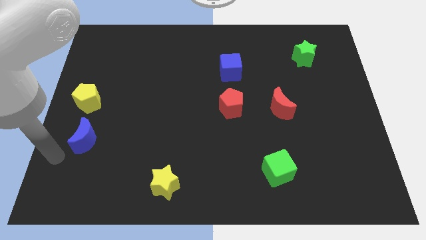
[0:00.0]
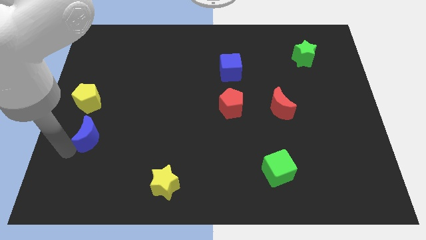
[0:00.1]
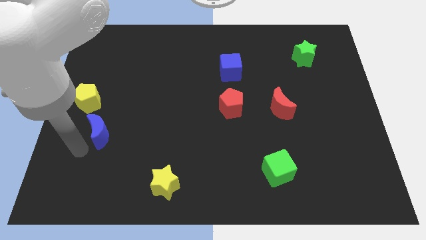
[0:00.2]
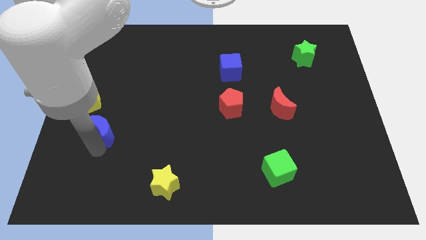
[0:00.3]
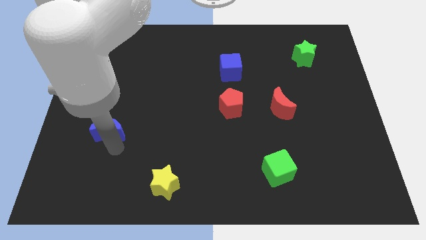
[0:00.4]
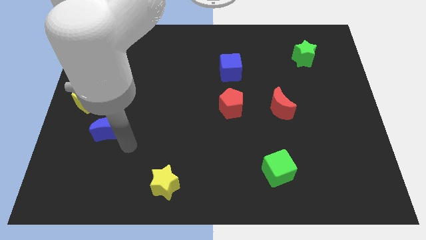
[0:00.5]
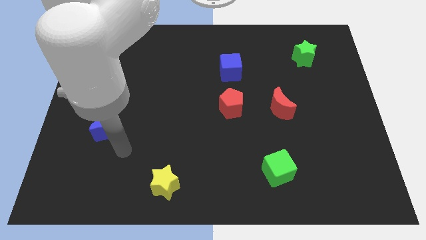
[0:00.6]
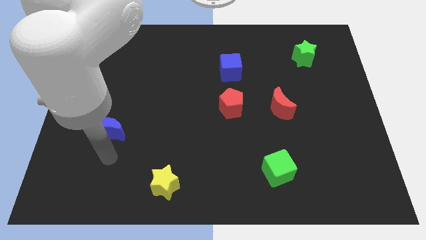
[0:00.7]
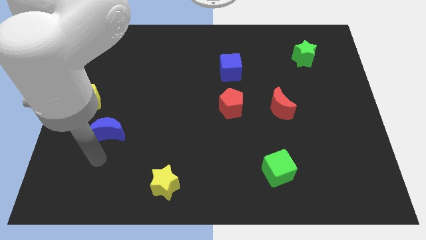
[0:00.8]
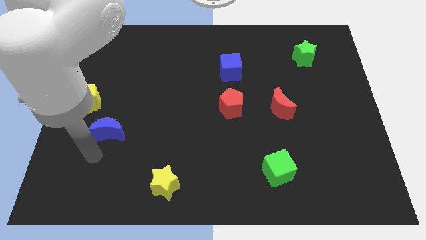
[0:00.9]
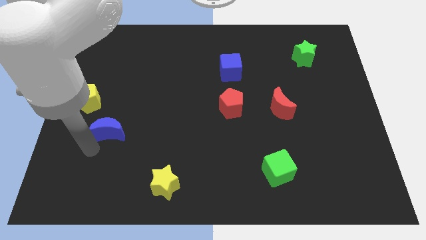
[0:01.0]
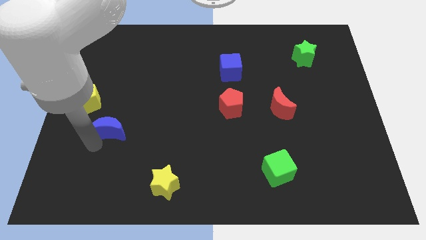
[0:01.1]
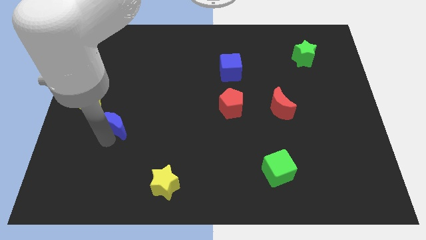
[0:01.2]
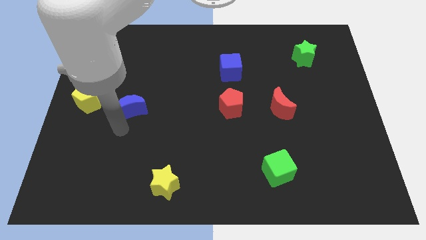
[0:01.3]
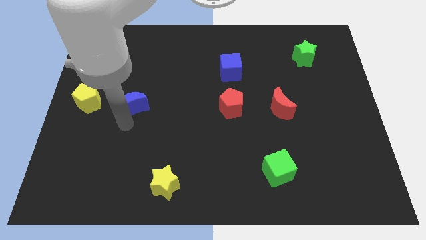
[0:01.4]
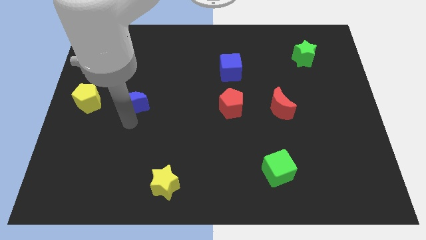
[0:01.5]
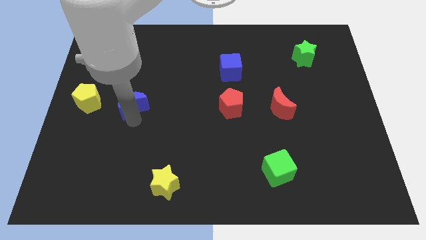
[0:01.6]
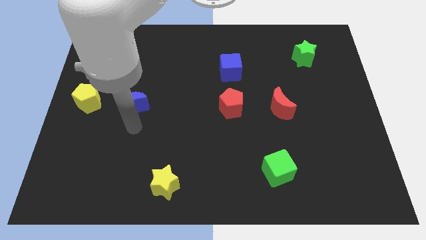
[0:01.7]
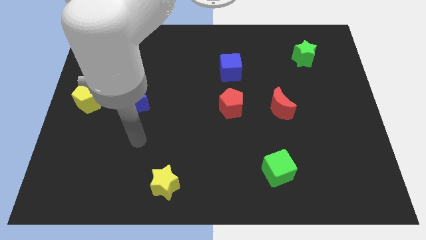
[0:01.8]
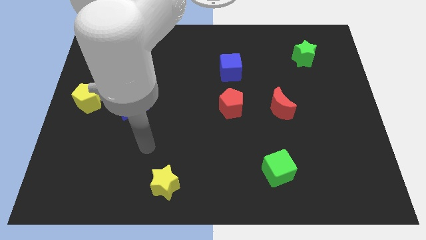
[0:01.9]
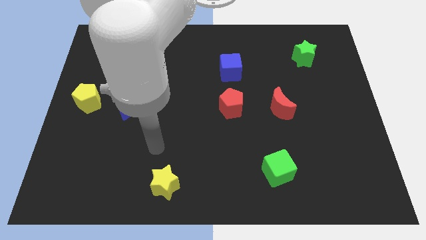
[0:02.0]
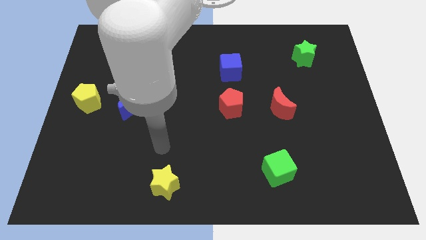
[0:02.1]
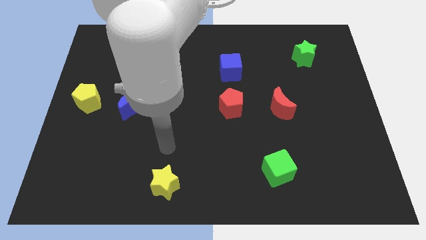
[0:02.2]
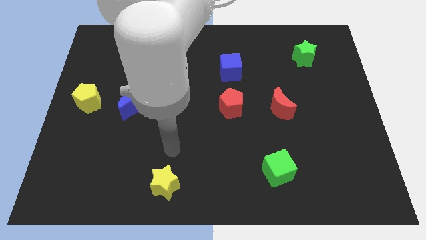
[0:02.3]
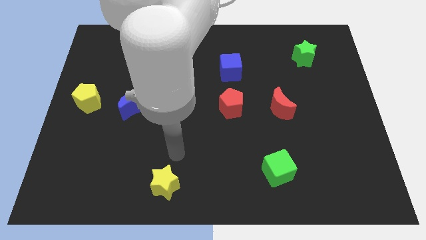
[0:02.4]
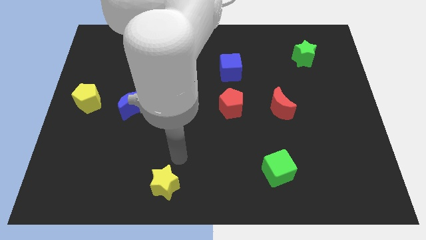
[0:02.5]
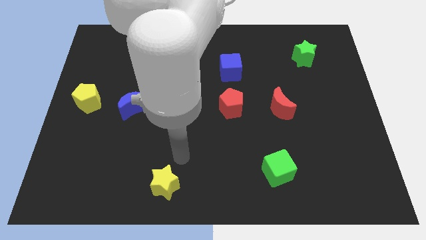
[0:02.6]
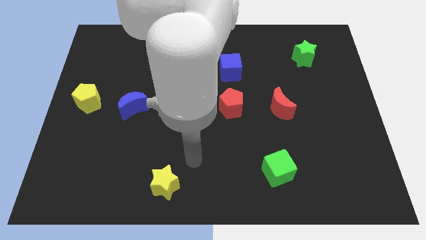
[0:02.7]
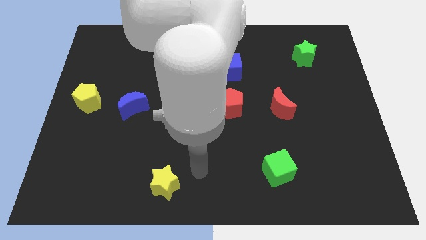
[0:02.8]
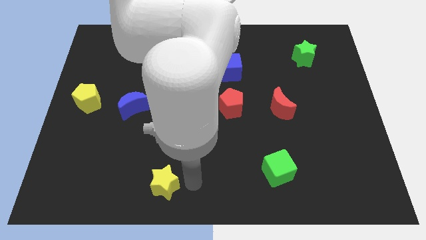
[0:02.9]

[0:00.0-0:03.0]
place the blue crescent to the right of the yellow pentagon

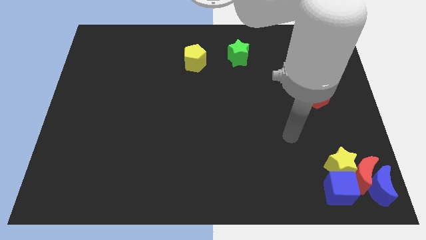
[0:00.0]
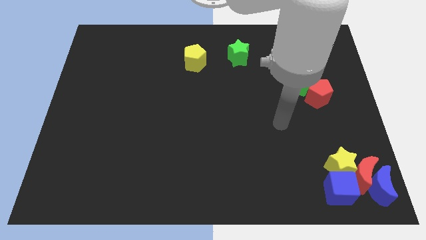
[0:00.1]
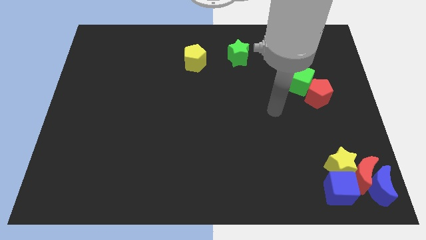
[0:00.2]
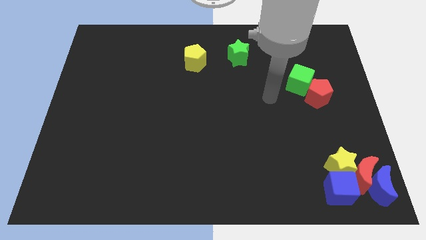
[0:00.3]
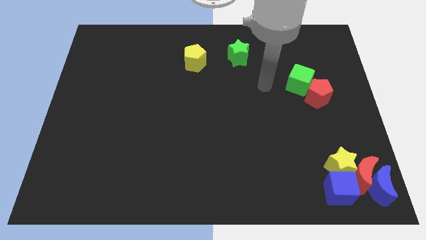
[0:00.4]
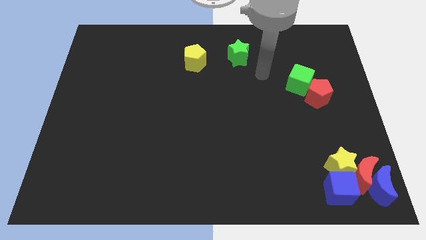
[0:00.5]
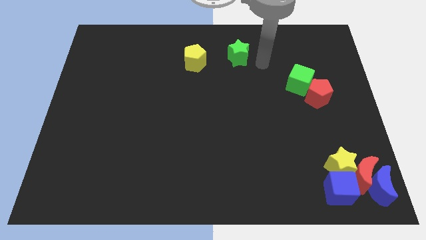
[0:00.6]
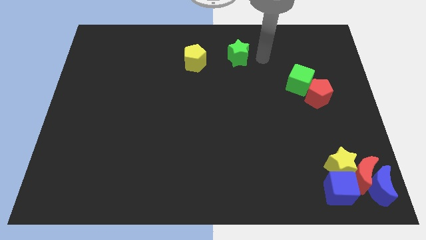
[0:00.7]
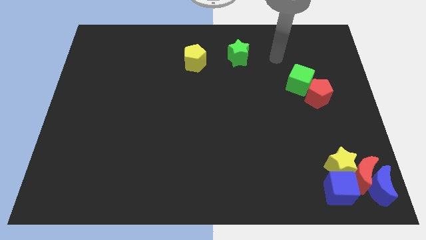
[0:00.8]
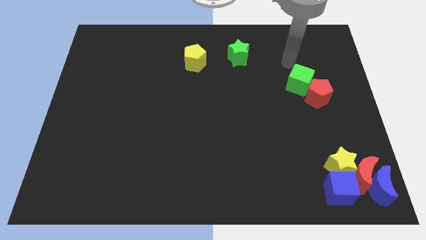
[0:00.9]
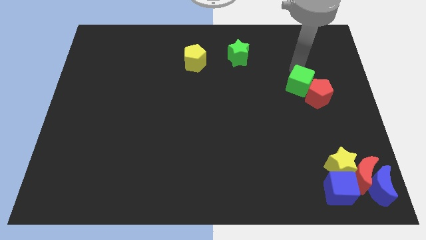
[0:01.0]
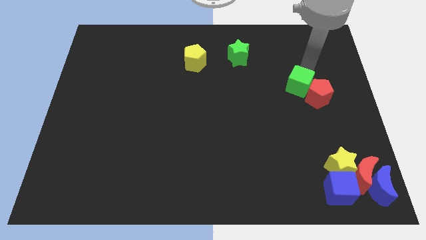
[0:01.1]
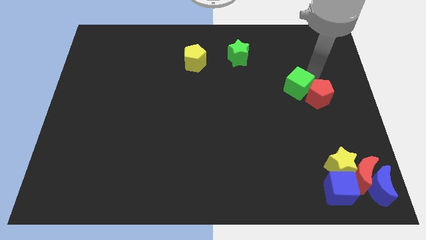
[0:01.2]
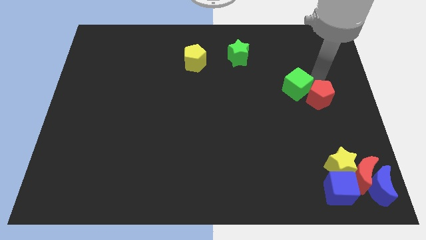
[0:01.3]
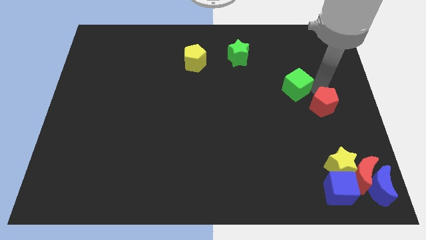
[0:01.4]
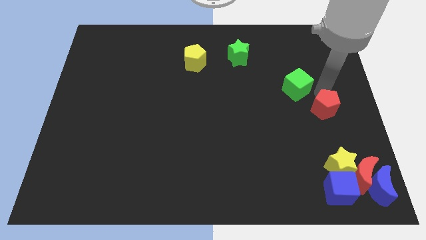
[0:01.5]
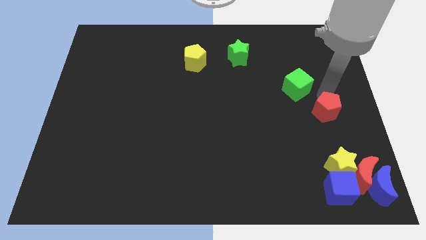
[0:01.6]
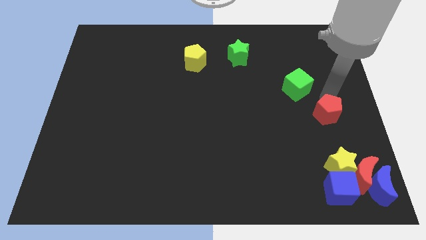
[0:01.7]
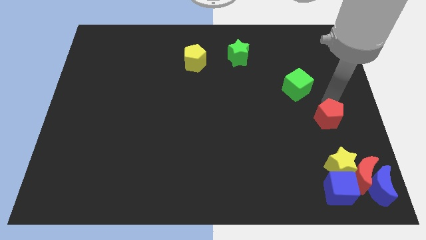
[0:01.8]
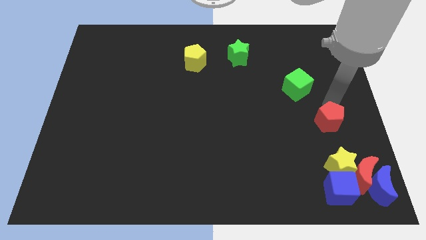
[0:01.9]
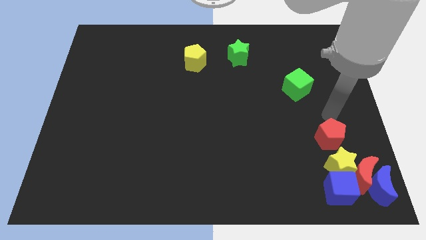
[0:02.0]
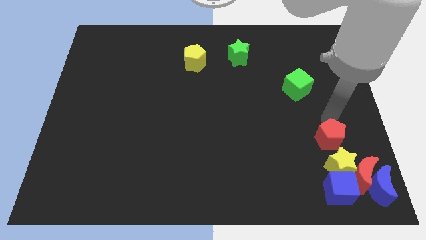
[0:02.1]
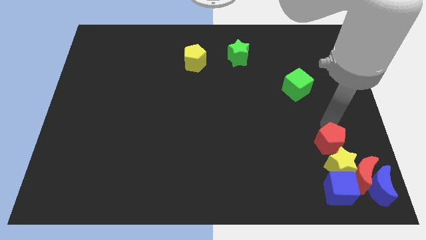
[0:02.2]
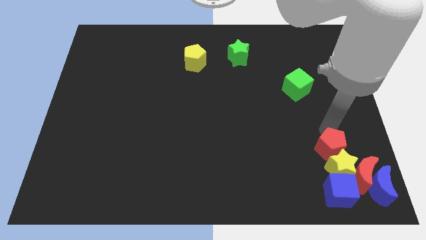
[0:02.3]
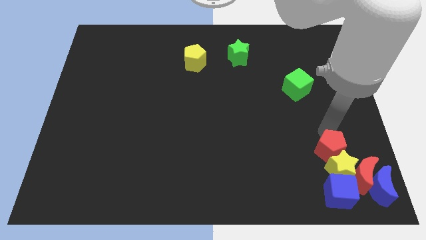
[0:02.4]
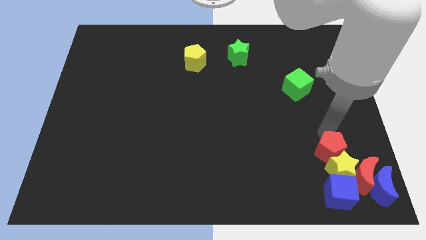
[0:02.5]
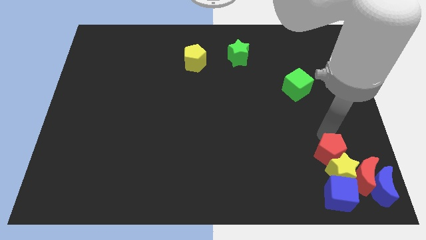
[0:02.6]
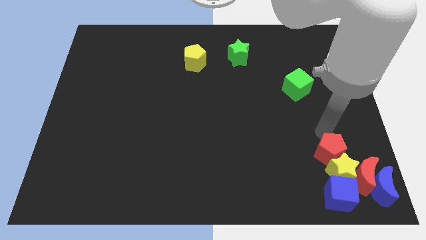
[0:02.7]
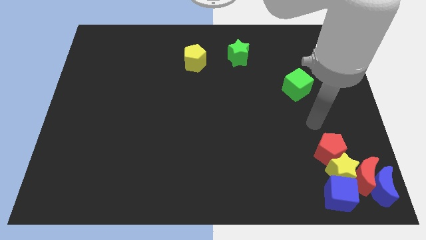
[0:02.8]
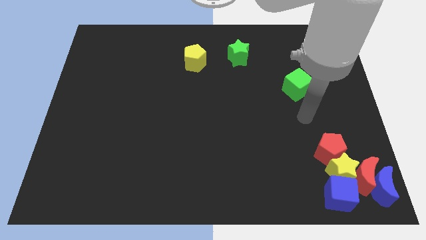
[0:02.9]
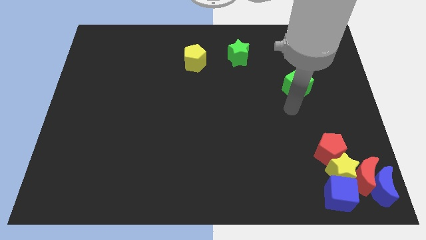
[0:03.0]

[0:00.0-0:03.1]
drag red pentagon into yellow star

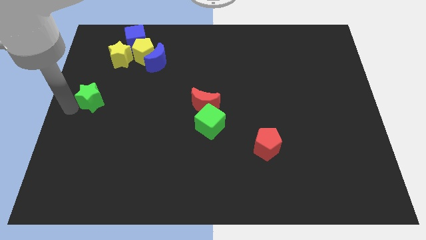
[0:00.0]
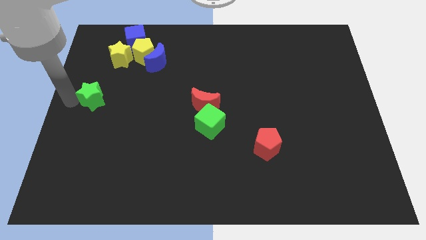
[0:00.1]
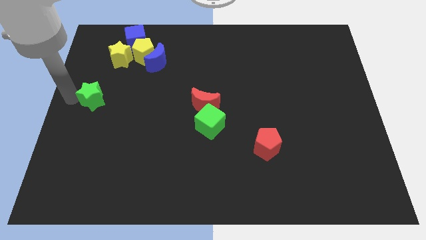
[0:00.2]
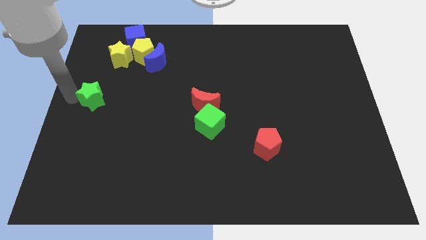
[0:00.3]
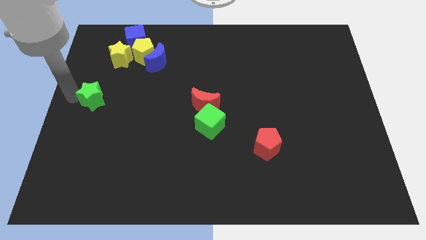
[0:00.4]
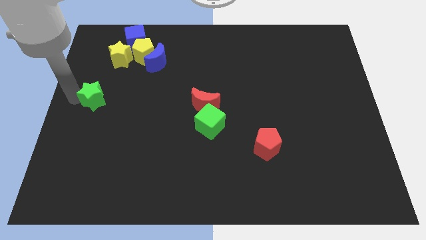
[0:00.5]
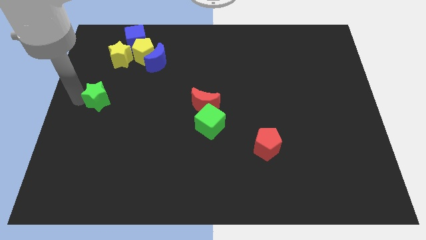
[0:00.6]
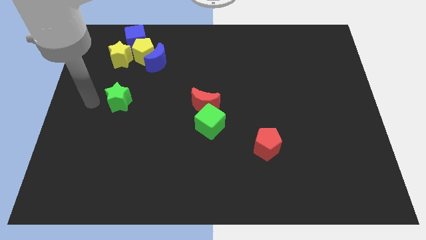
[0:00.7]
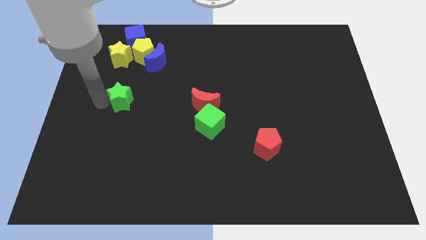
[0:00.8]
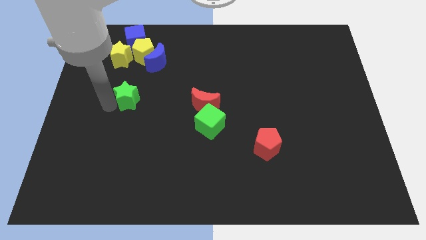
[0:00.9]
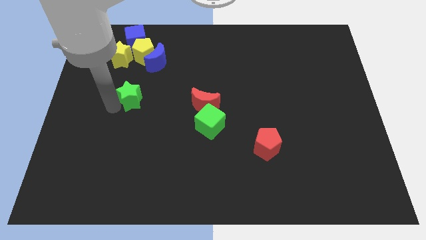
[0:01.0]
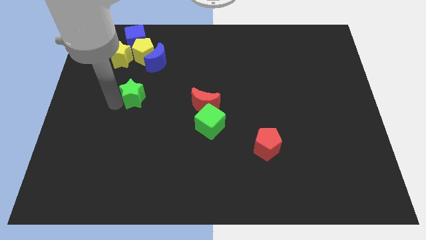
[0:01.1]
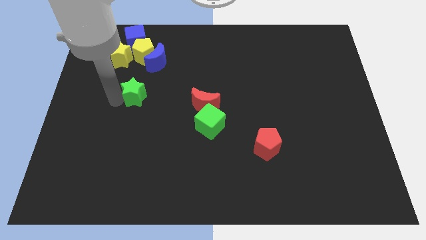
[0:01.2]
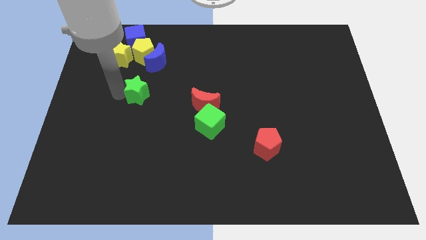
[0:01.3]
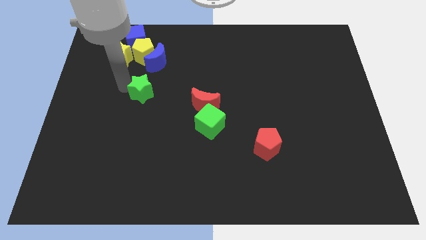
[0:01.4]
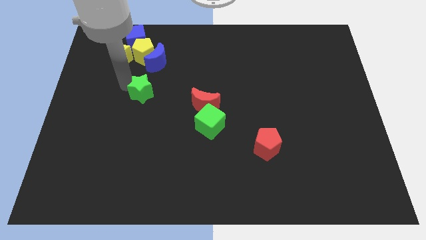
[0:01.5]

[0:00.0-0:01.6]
place the green star down to the yellow pentagon

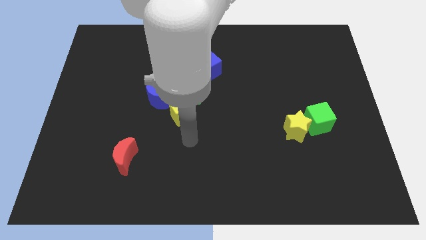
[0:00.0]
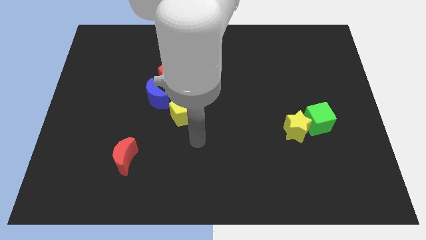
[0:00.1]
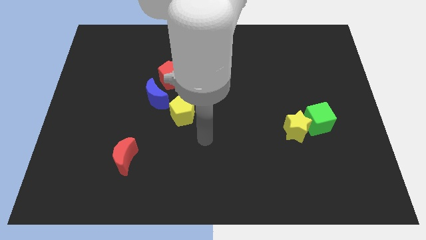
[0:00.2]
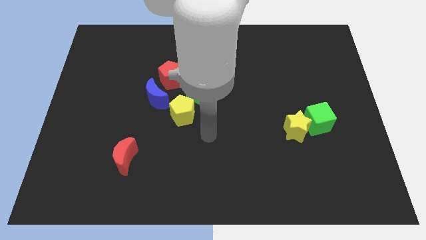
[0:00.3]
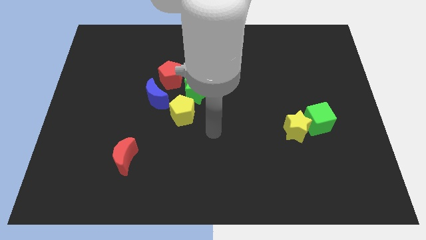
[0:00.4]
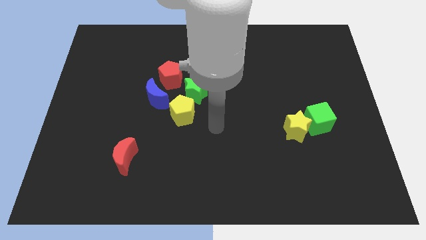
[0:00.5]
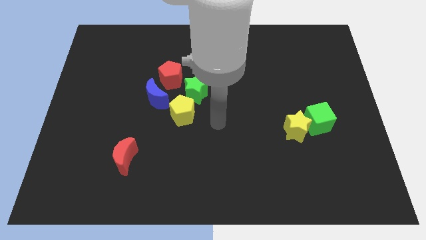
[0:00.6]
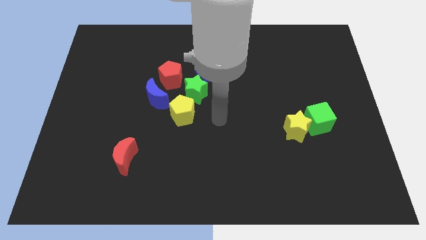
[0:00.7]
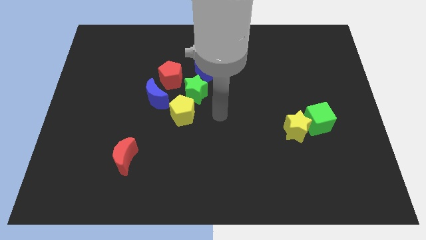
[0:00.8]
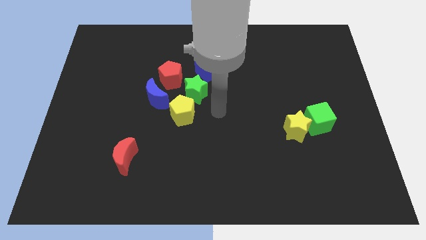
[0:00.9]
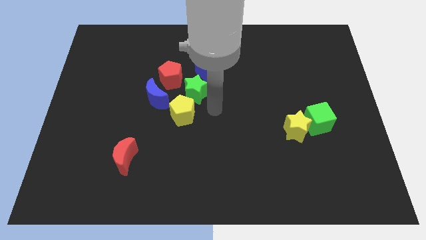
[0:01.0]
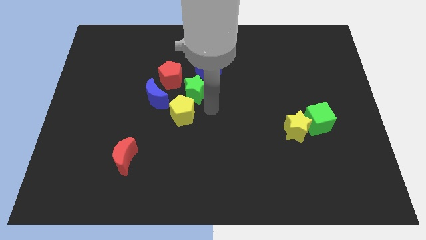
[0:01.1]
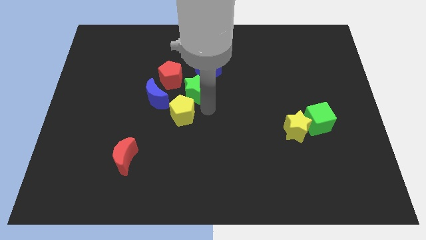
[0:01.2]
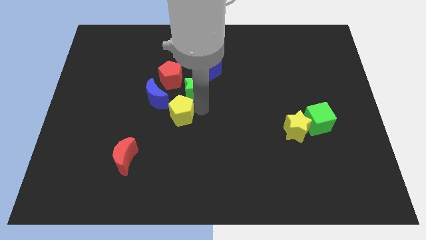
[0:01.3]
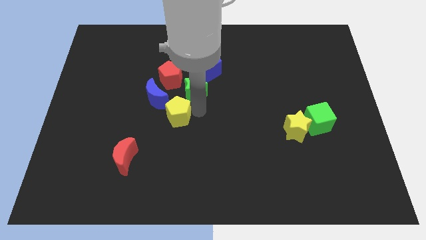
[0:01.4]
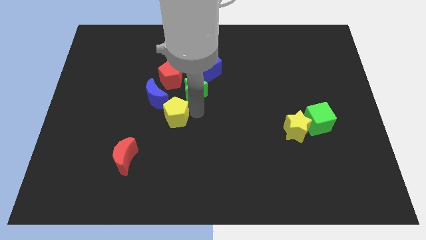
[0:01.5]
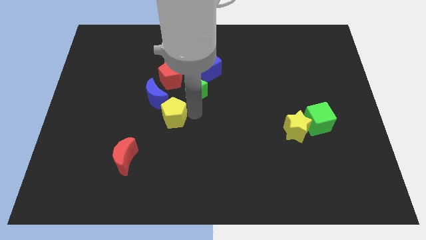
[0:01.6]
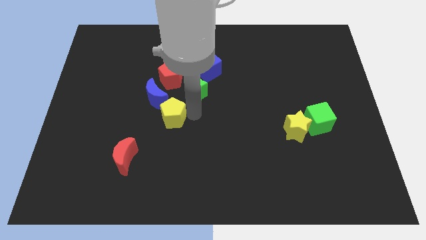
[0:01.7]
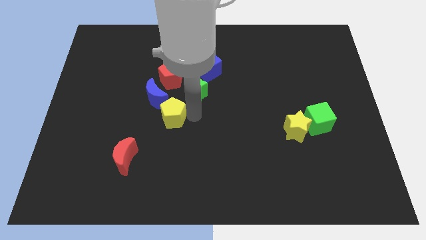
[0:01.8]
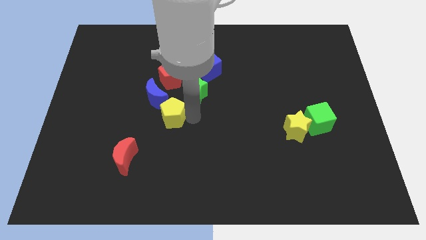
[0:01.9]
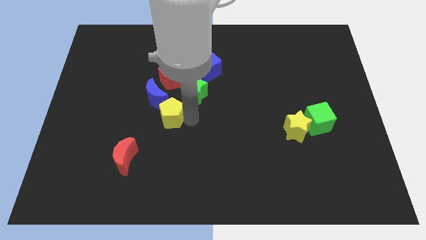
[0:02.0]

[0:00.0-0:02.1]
move the yellow pentagon towards the bottom left to the blue crescent
